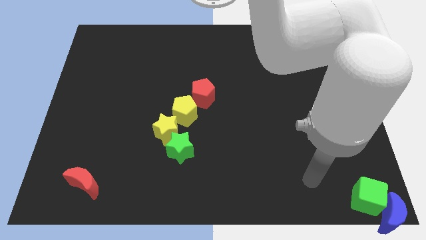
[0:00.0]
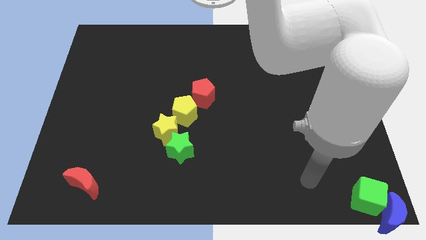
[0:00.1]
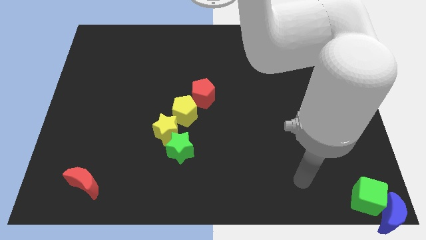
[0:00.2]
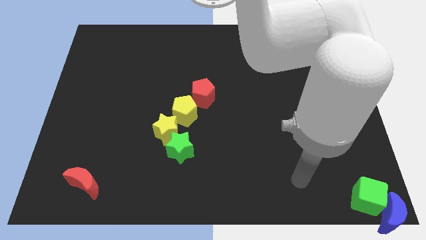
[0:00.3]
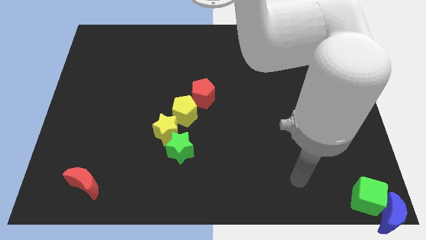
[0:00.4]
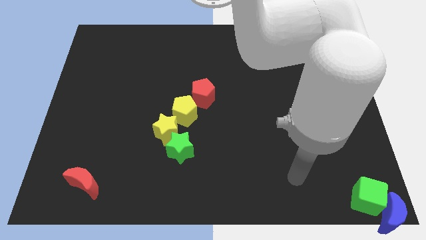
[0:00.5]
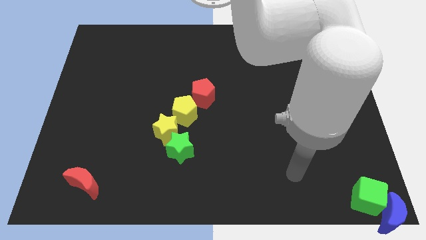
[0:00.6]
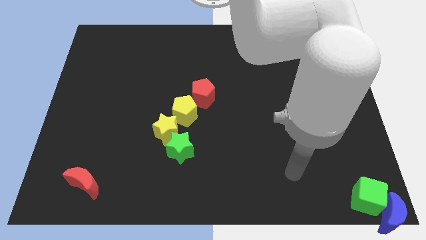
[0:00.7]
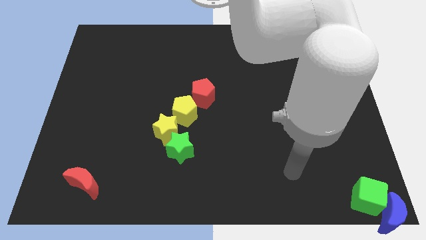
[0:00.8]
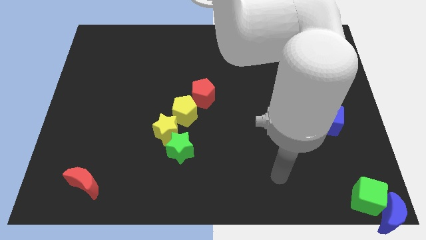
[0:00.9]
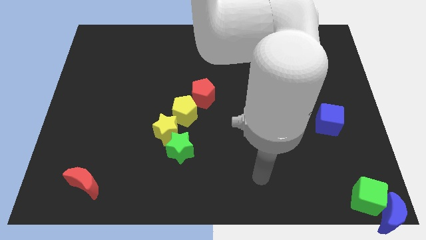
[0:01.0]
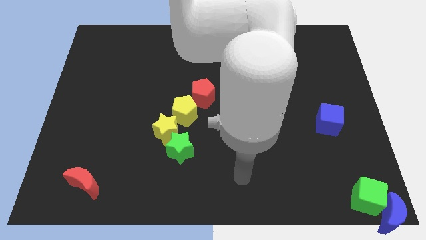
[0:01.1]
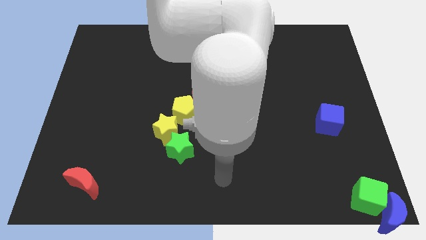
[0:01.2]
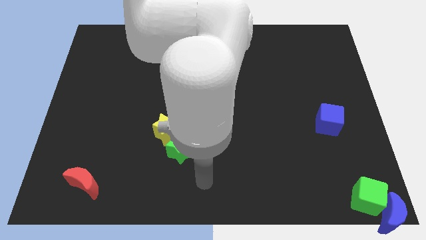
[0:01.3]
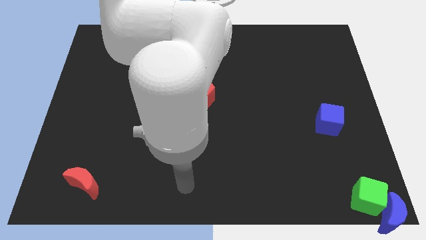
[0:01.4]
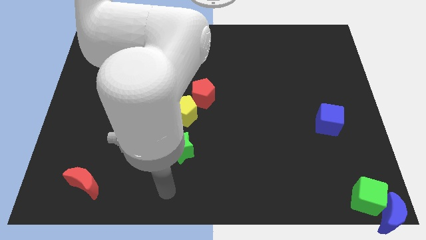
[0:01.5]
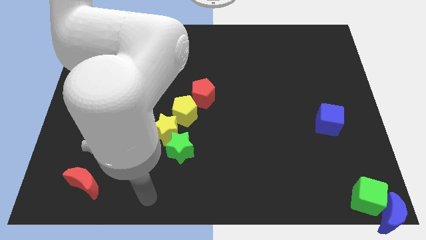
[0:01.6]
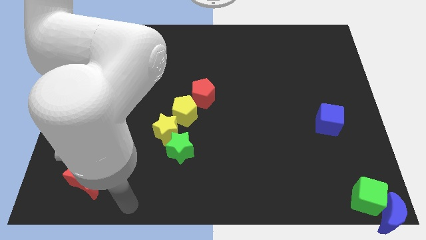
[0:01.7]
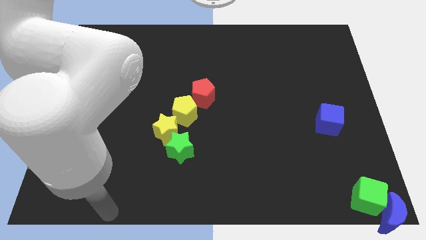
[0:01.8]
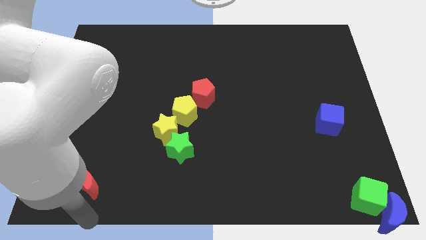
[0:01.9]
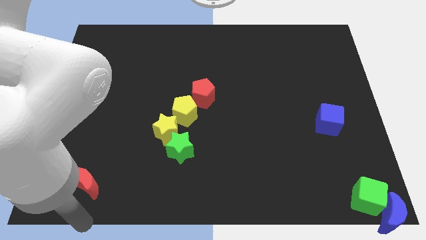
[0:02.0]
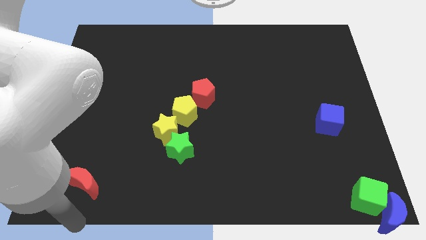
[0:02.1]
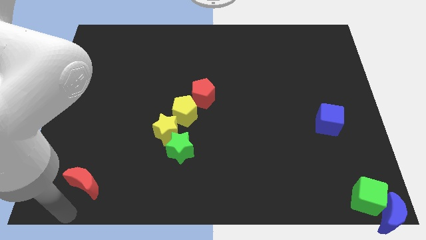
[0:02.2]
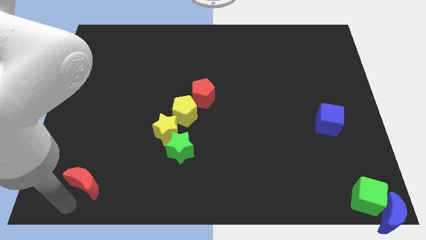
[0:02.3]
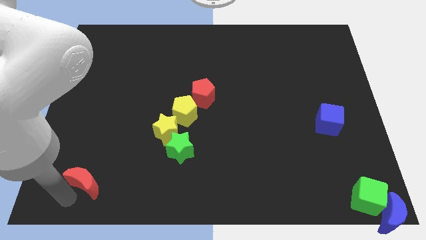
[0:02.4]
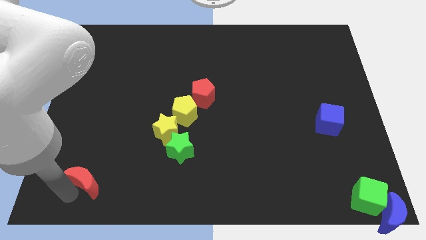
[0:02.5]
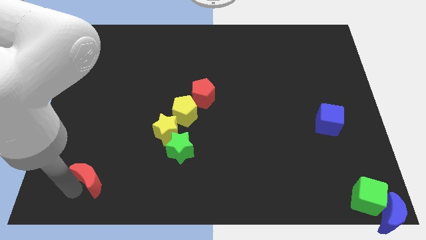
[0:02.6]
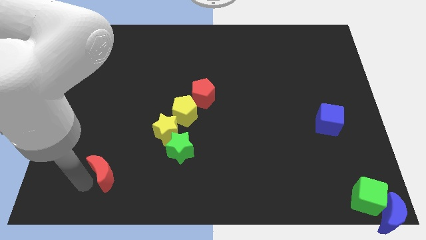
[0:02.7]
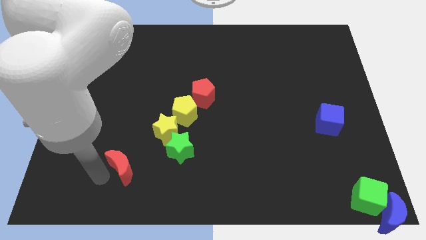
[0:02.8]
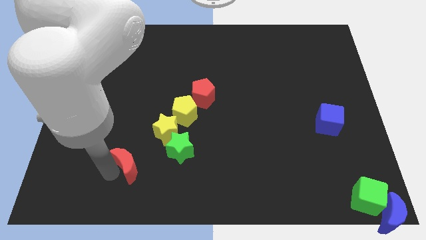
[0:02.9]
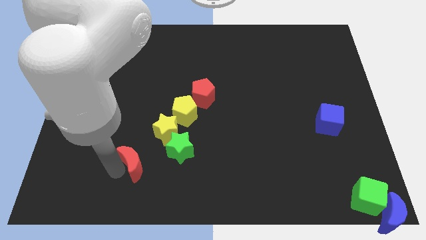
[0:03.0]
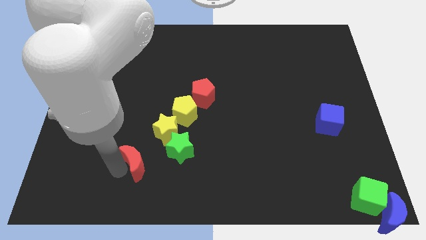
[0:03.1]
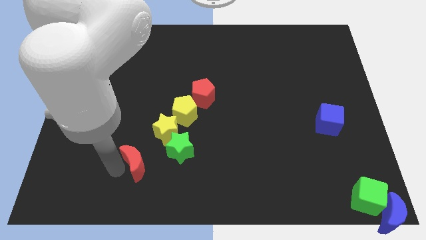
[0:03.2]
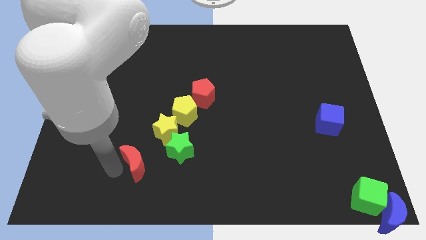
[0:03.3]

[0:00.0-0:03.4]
slide the red moon towards center

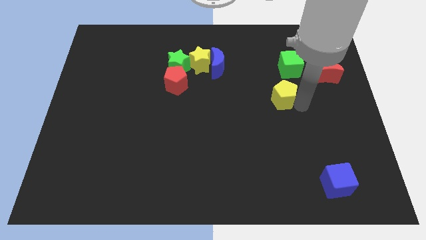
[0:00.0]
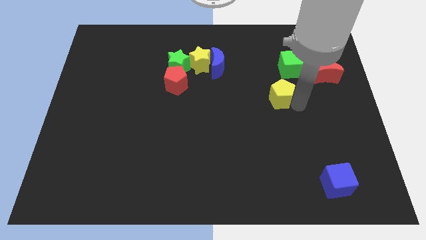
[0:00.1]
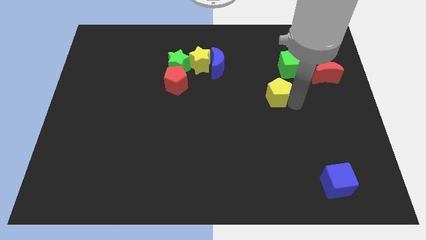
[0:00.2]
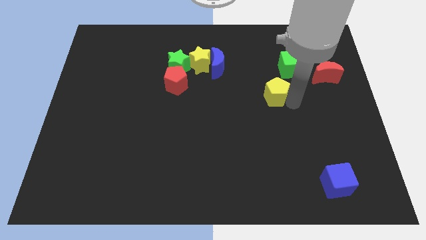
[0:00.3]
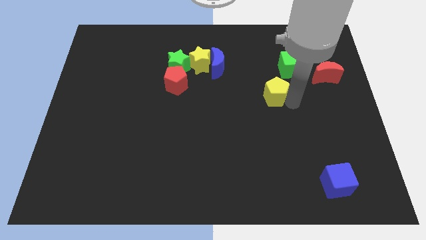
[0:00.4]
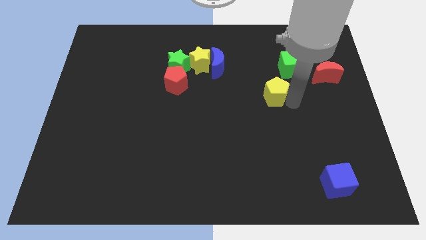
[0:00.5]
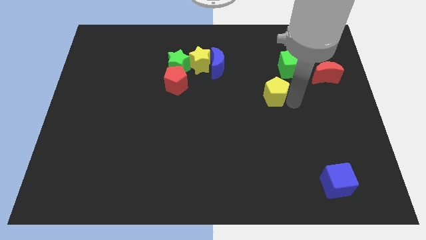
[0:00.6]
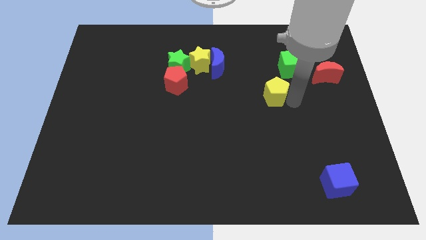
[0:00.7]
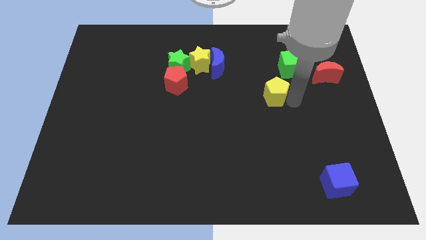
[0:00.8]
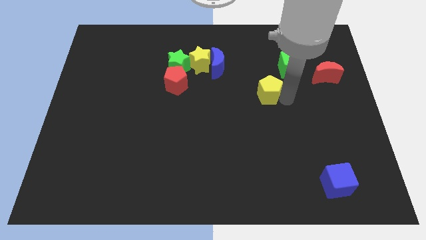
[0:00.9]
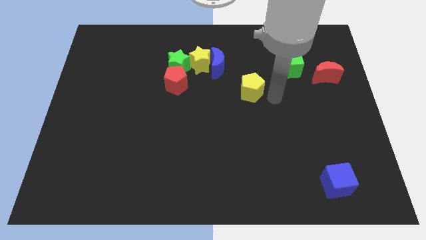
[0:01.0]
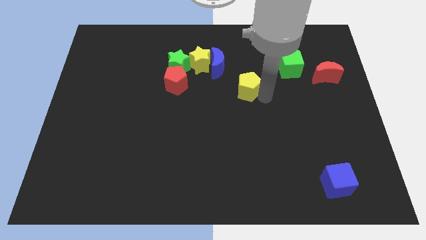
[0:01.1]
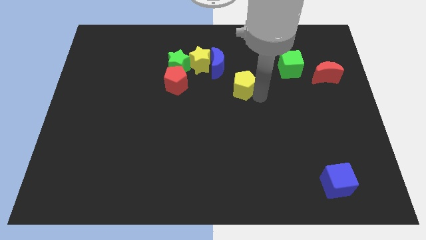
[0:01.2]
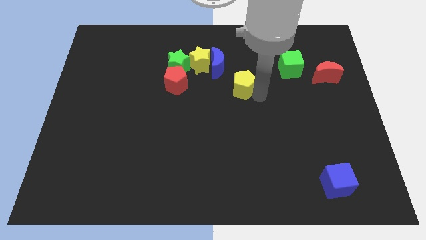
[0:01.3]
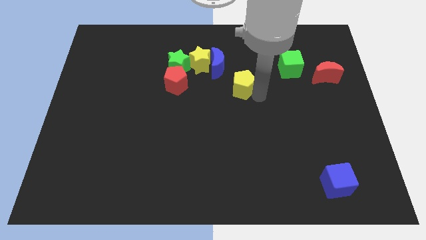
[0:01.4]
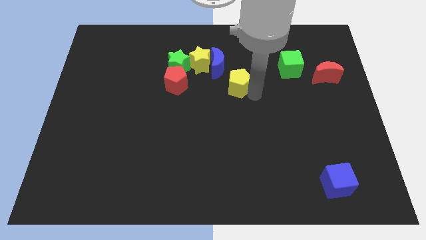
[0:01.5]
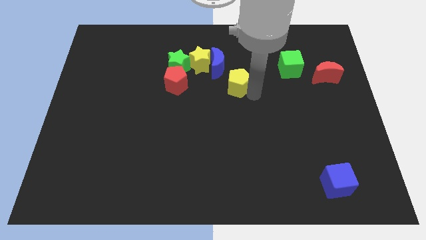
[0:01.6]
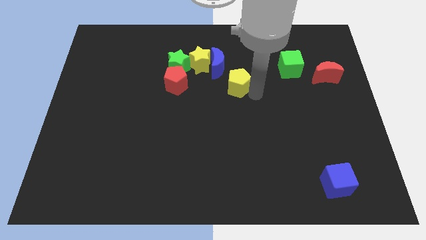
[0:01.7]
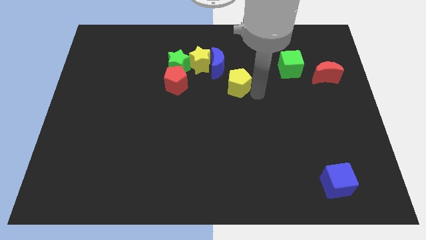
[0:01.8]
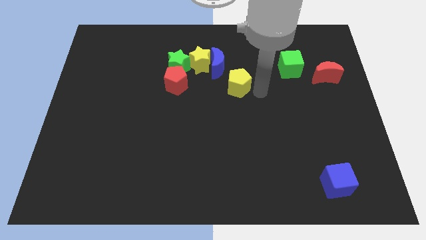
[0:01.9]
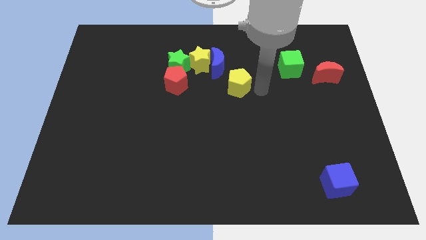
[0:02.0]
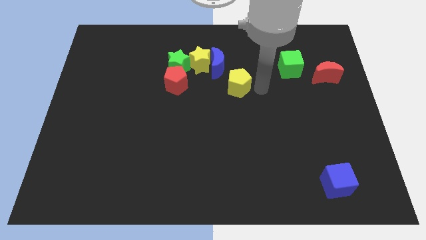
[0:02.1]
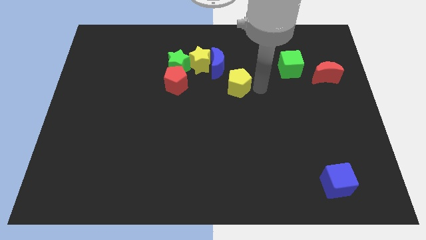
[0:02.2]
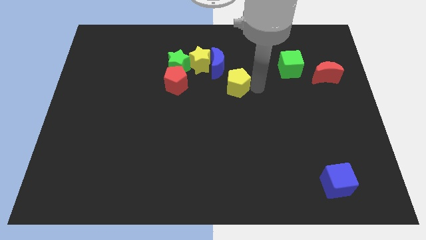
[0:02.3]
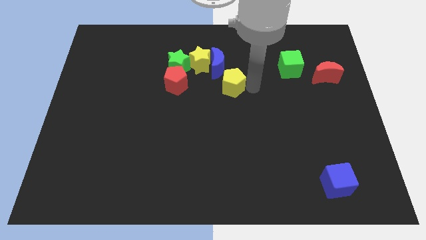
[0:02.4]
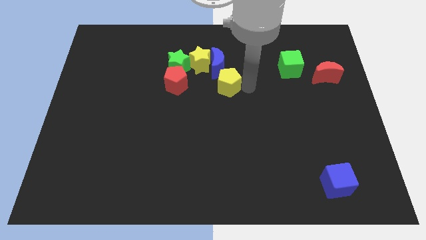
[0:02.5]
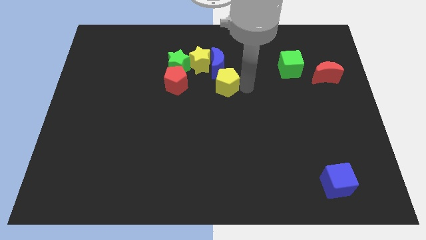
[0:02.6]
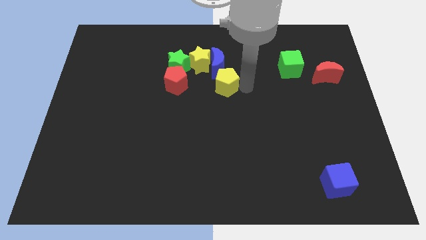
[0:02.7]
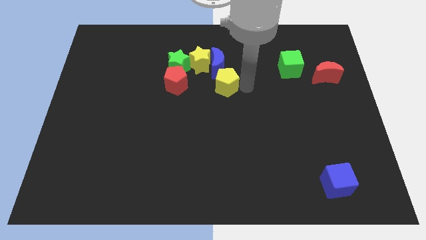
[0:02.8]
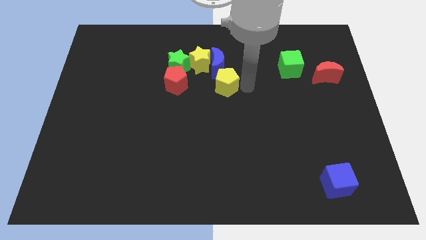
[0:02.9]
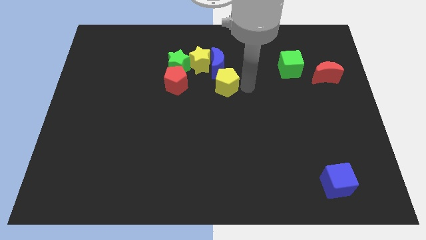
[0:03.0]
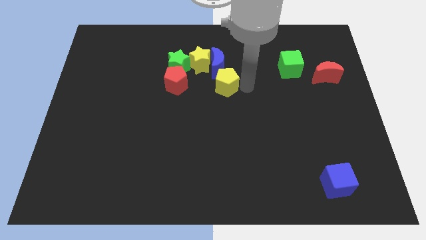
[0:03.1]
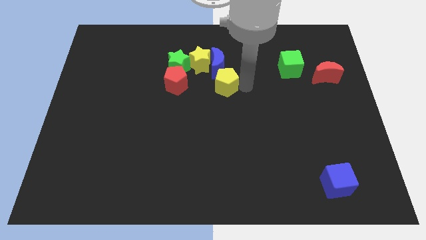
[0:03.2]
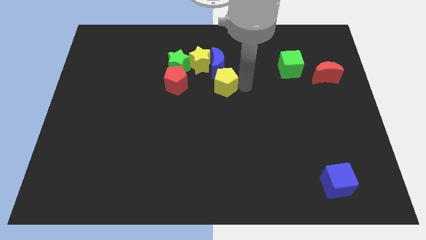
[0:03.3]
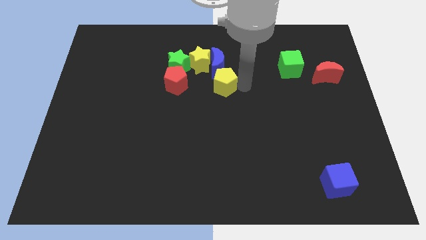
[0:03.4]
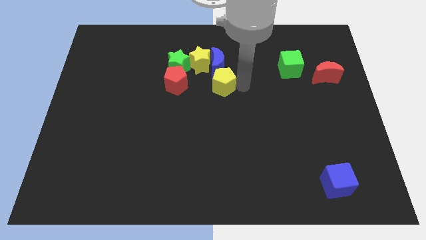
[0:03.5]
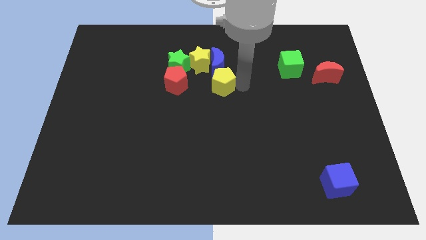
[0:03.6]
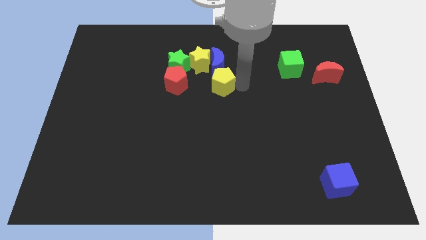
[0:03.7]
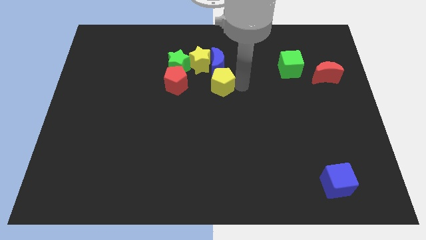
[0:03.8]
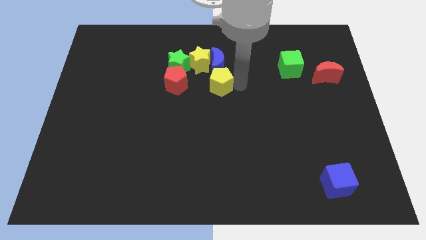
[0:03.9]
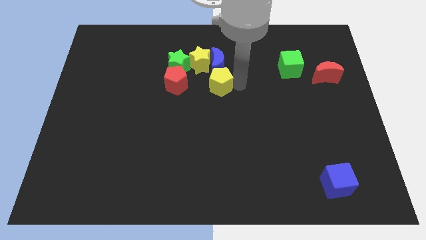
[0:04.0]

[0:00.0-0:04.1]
place the yellow pentagon down to the blue moon

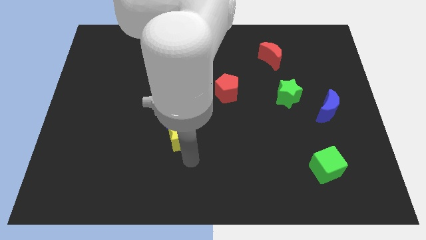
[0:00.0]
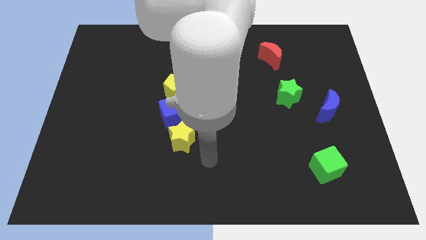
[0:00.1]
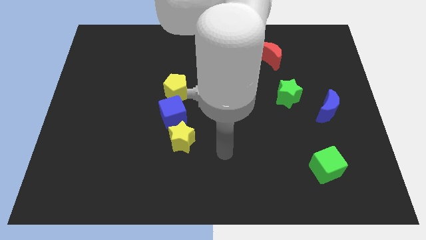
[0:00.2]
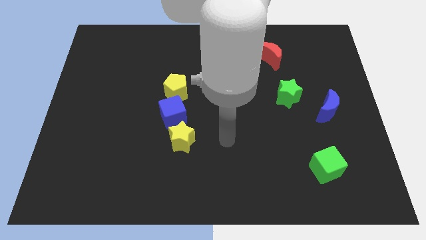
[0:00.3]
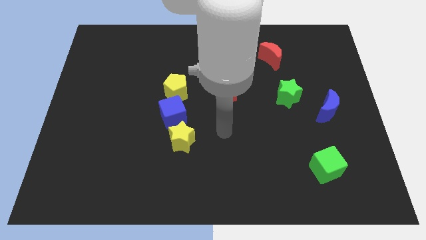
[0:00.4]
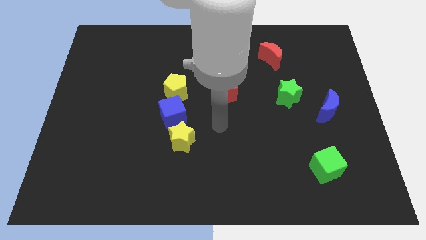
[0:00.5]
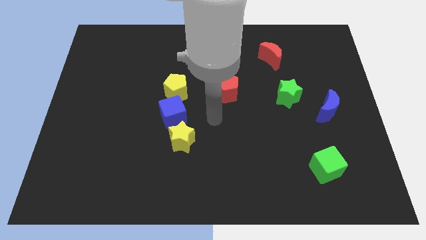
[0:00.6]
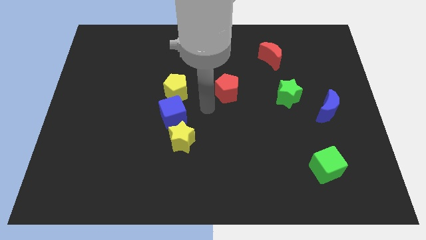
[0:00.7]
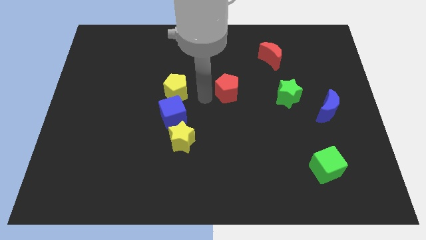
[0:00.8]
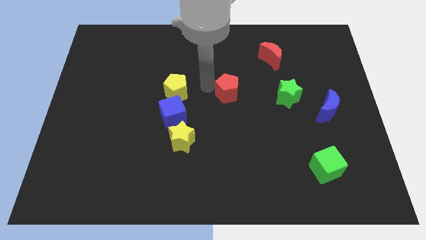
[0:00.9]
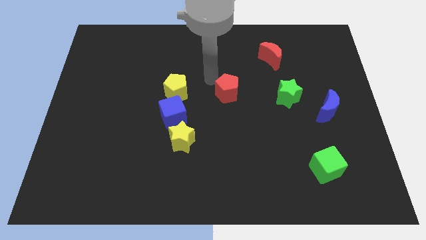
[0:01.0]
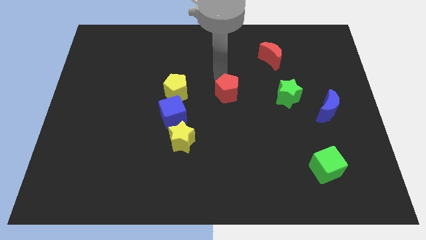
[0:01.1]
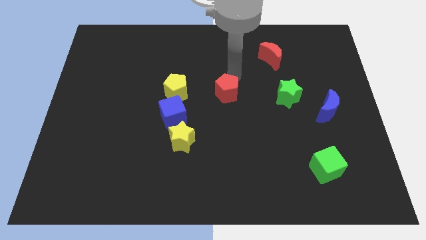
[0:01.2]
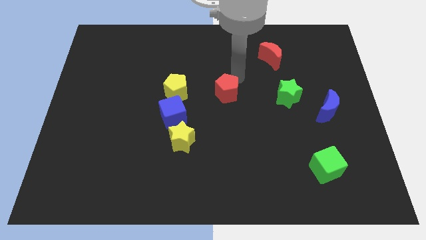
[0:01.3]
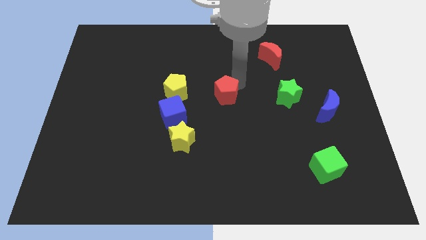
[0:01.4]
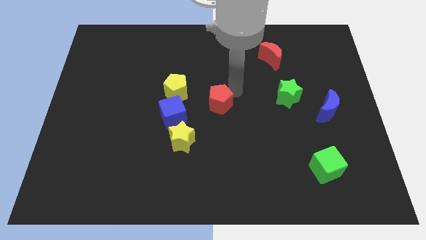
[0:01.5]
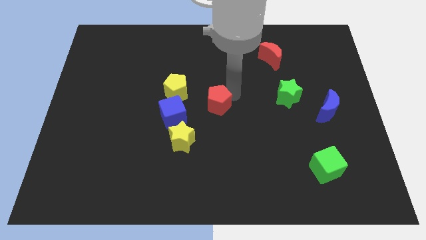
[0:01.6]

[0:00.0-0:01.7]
touch the red pentagon slightly
